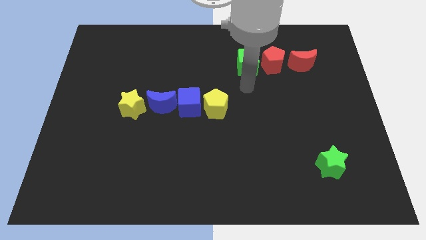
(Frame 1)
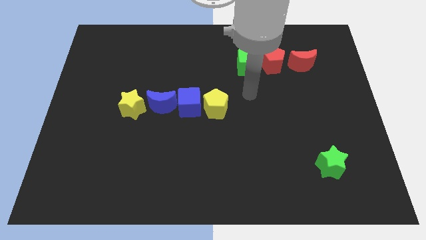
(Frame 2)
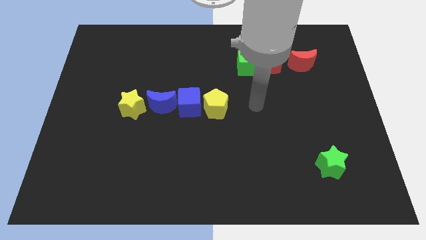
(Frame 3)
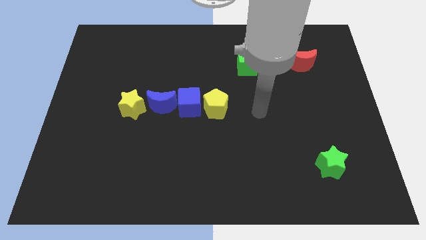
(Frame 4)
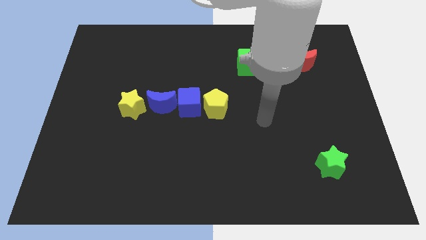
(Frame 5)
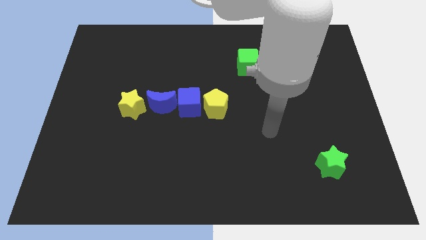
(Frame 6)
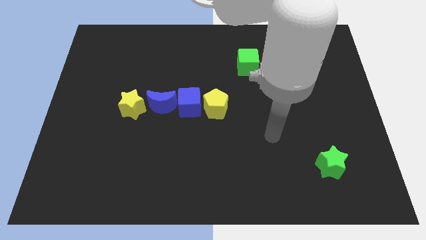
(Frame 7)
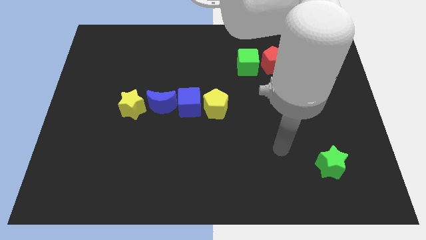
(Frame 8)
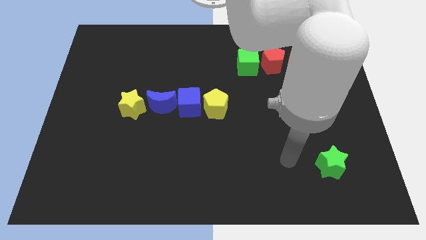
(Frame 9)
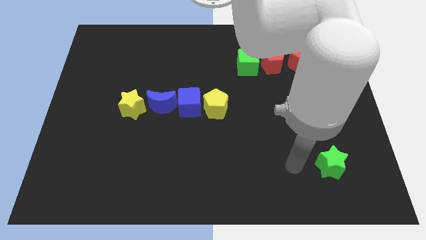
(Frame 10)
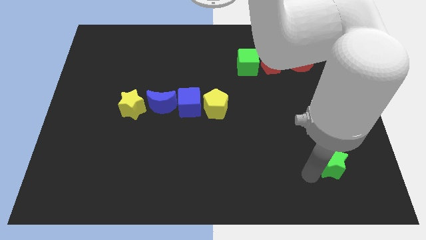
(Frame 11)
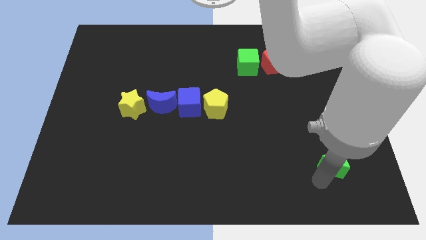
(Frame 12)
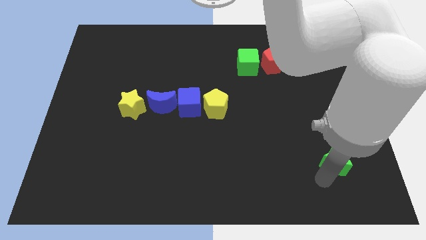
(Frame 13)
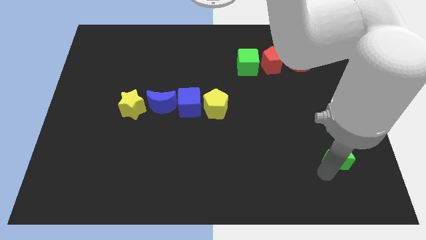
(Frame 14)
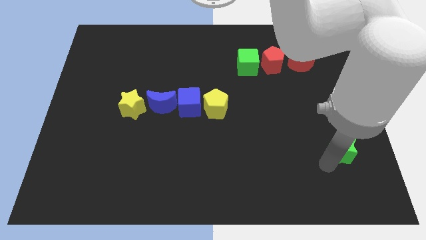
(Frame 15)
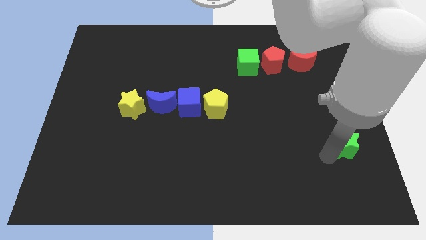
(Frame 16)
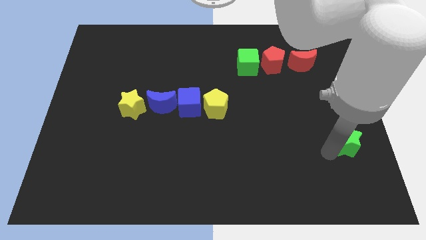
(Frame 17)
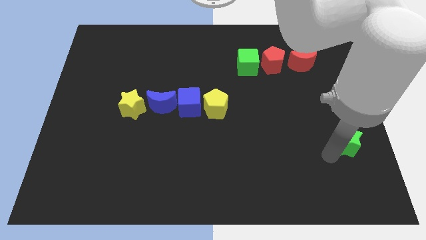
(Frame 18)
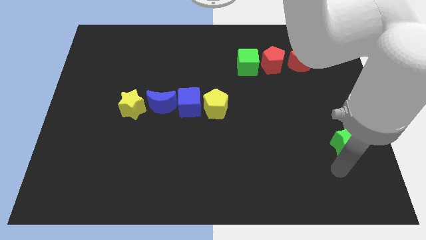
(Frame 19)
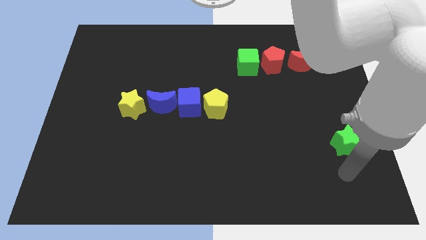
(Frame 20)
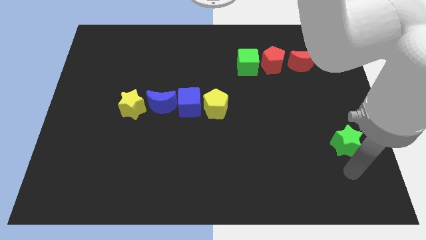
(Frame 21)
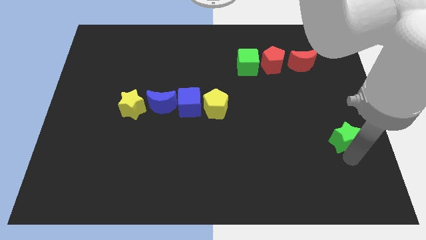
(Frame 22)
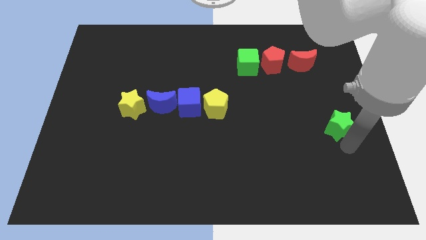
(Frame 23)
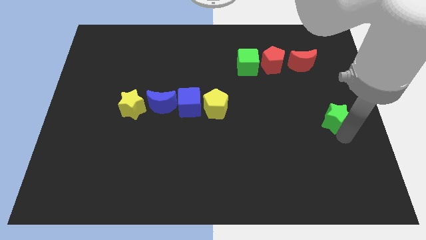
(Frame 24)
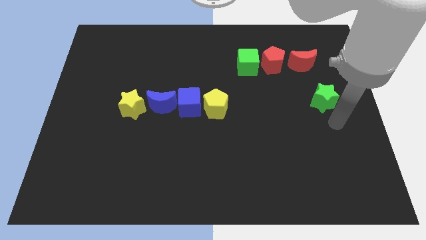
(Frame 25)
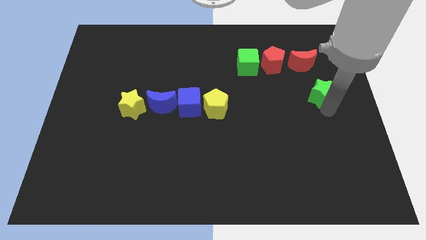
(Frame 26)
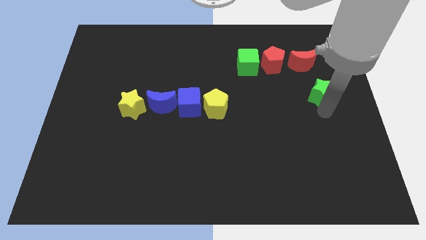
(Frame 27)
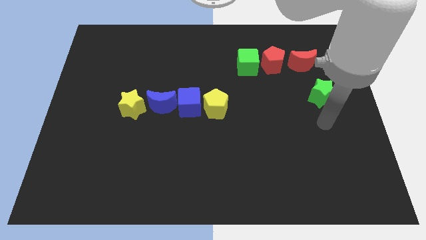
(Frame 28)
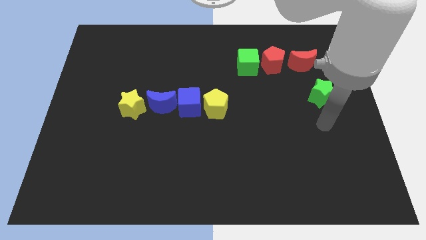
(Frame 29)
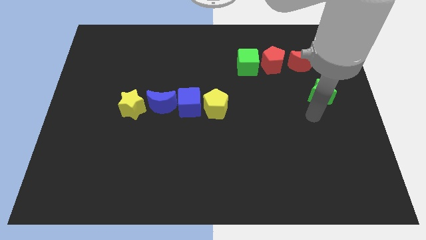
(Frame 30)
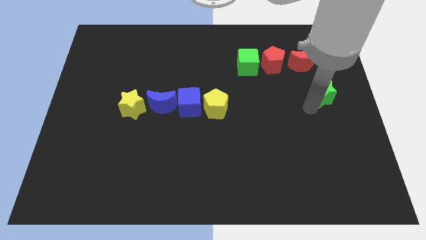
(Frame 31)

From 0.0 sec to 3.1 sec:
slide the green star towards the red moon

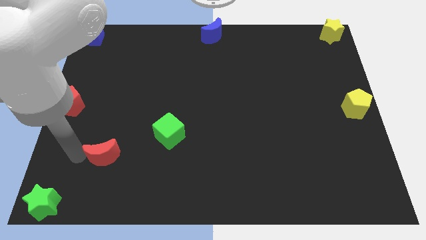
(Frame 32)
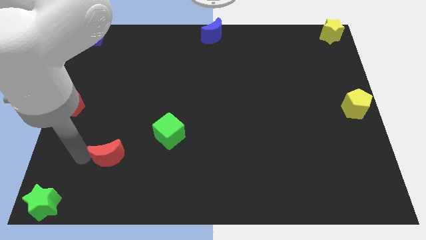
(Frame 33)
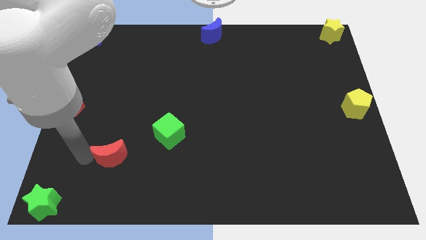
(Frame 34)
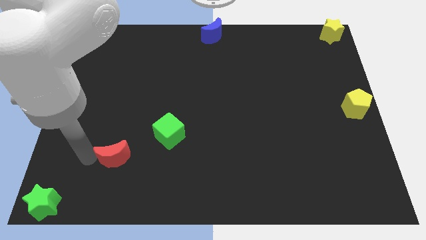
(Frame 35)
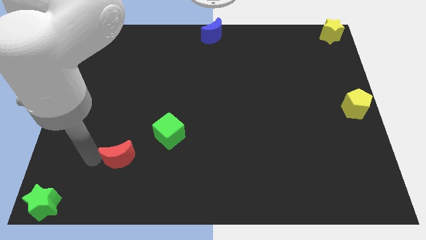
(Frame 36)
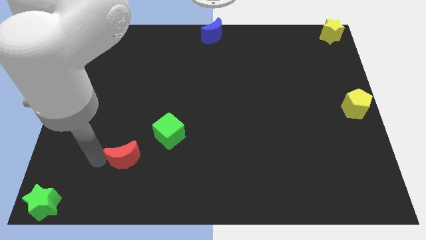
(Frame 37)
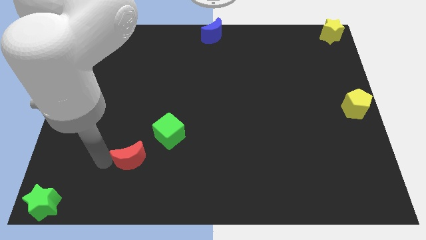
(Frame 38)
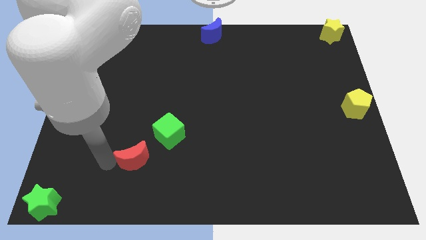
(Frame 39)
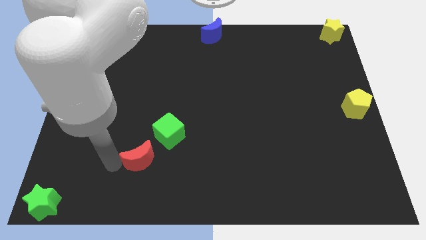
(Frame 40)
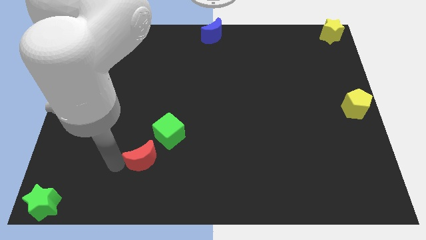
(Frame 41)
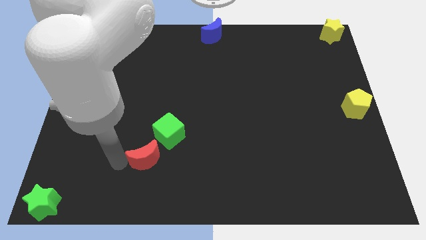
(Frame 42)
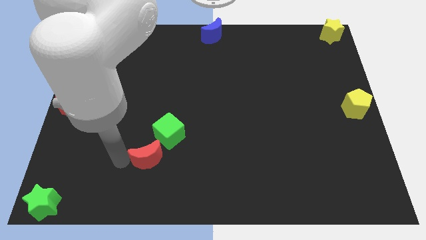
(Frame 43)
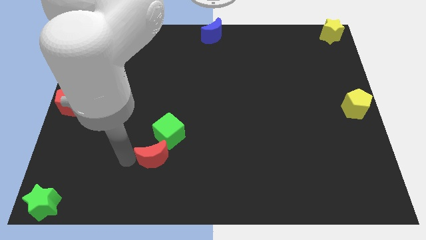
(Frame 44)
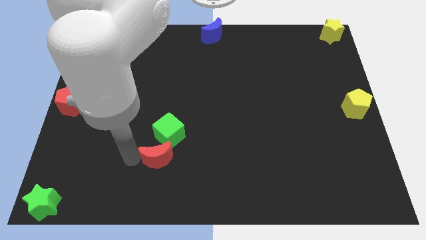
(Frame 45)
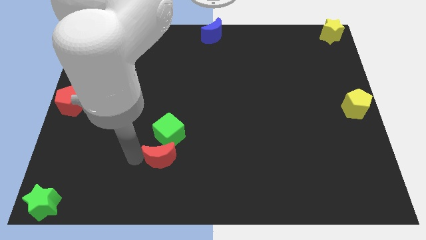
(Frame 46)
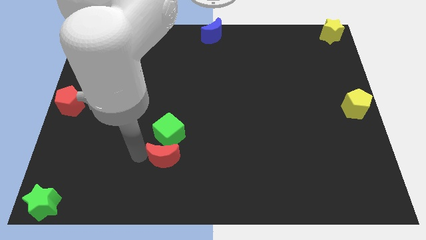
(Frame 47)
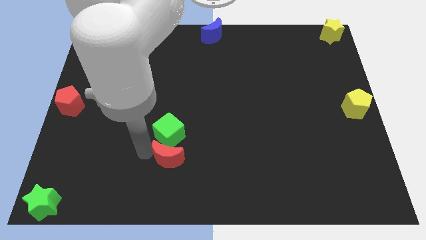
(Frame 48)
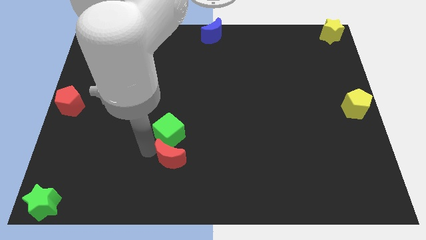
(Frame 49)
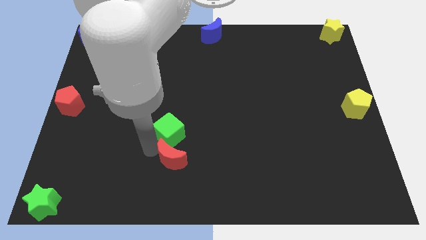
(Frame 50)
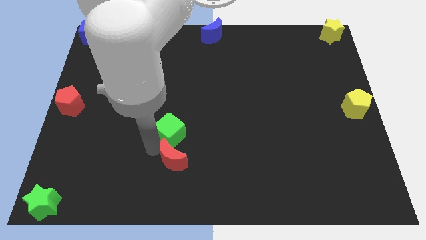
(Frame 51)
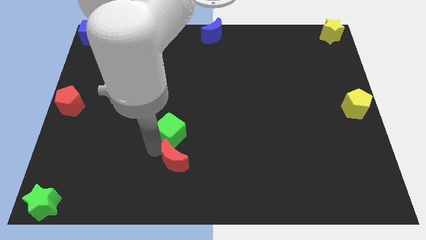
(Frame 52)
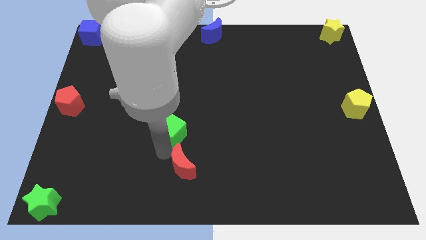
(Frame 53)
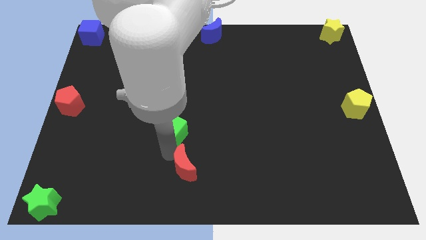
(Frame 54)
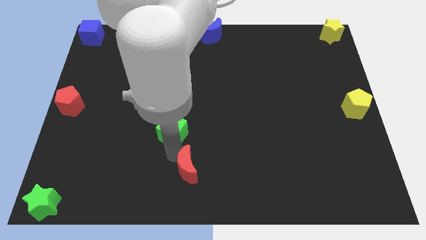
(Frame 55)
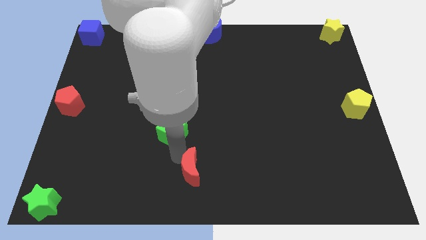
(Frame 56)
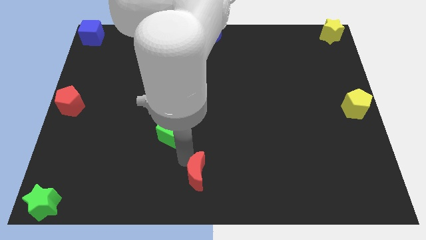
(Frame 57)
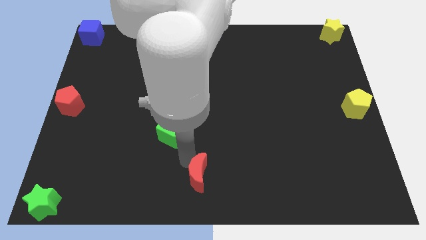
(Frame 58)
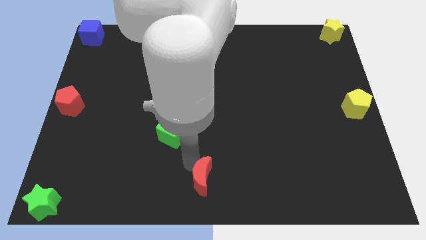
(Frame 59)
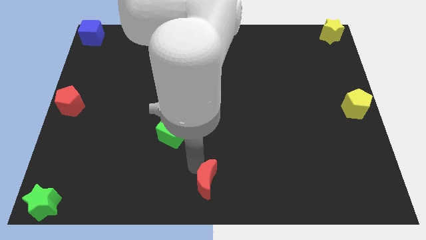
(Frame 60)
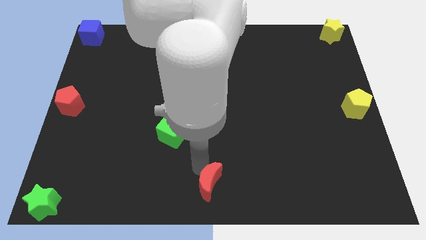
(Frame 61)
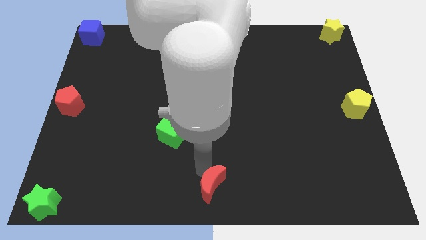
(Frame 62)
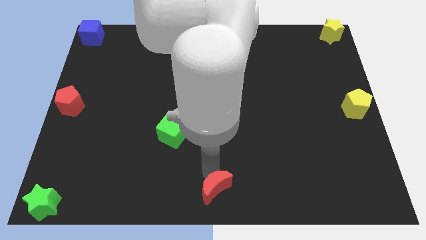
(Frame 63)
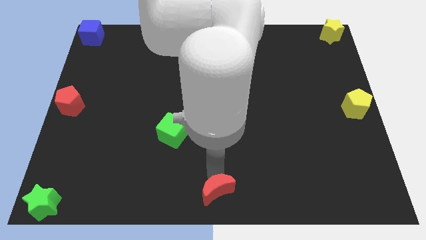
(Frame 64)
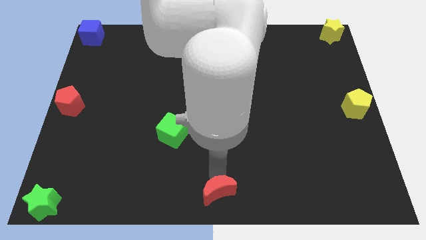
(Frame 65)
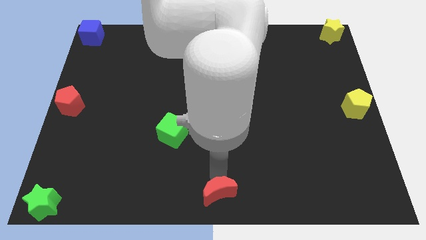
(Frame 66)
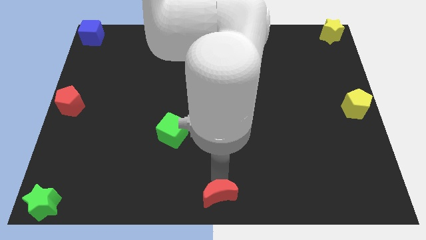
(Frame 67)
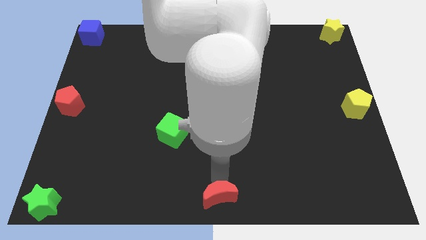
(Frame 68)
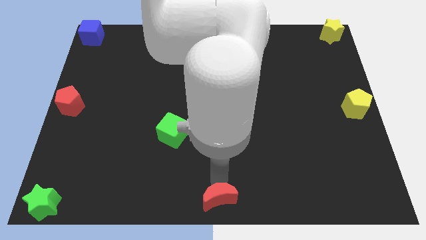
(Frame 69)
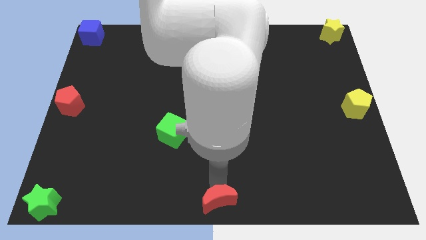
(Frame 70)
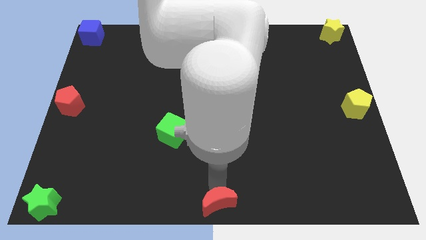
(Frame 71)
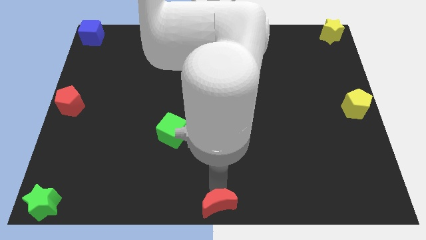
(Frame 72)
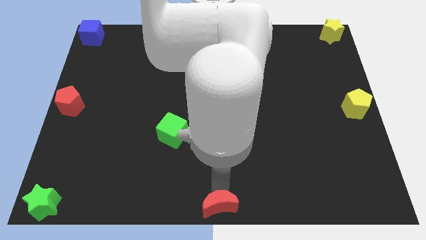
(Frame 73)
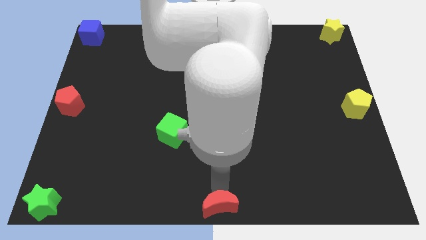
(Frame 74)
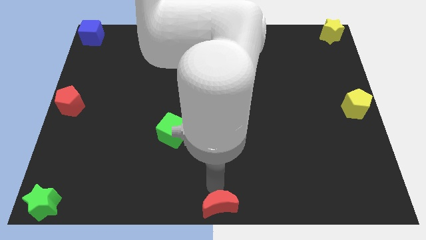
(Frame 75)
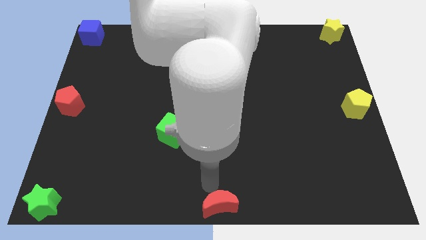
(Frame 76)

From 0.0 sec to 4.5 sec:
place the red crescent at the bottom center of the board

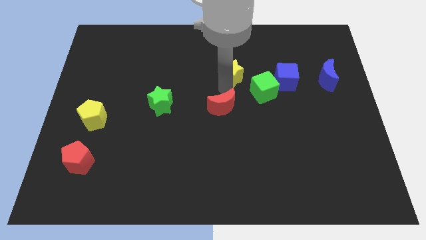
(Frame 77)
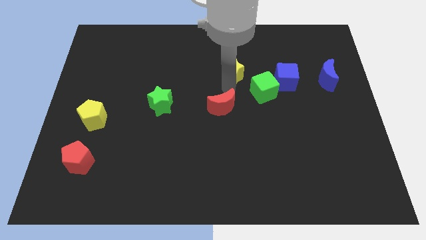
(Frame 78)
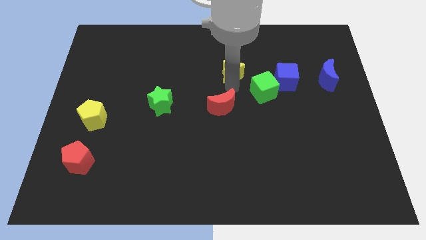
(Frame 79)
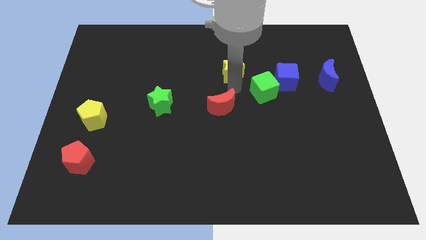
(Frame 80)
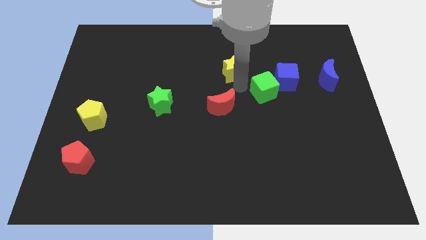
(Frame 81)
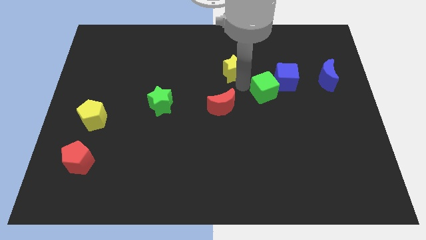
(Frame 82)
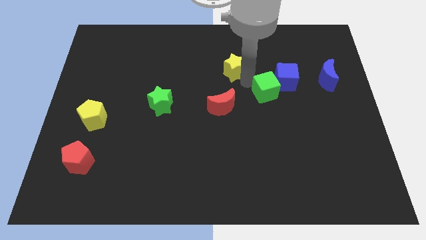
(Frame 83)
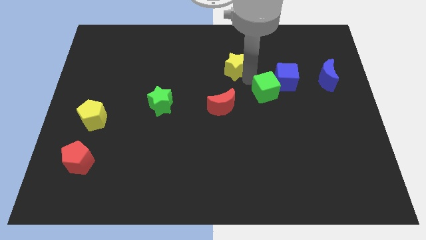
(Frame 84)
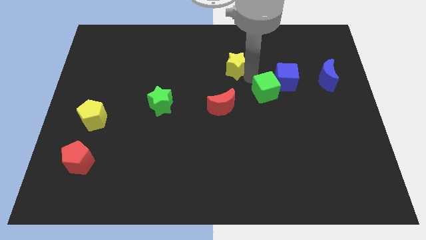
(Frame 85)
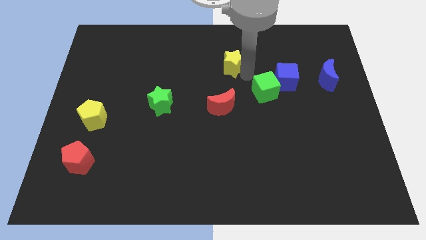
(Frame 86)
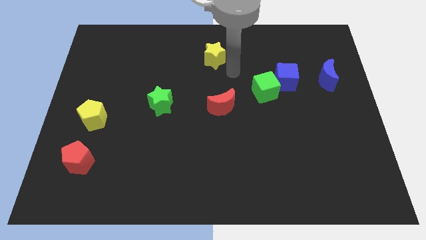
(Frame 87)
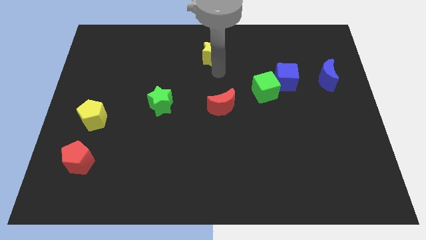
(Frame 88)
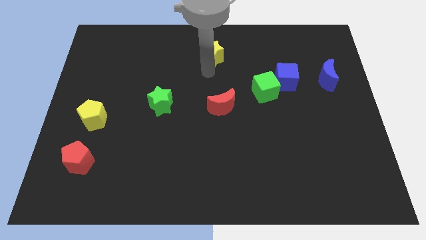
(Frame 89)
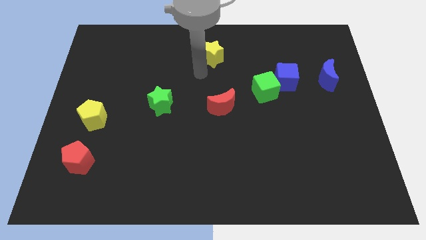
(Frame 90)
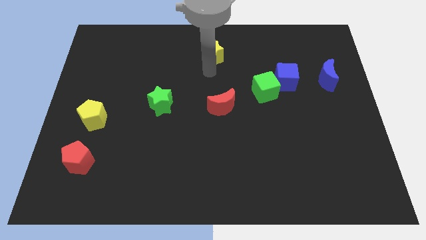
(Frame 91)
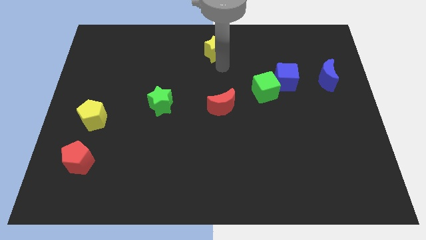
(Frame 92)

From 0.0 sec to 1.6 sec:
move the yellow star towards the top center
